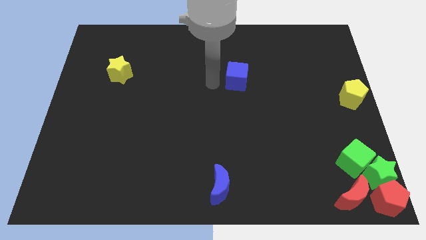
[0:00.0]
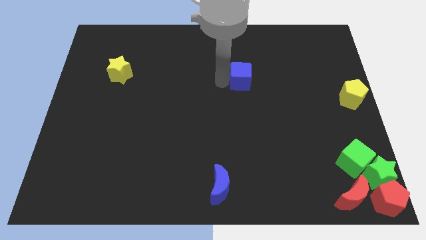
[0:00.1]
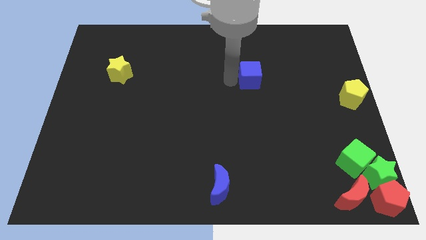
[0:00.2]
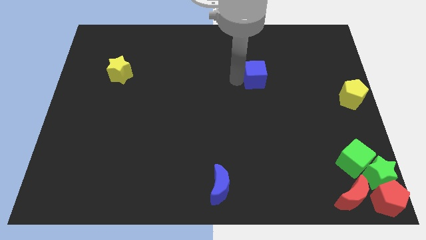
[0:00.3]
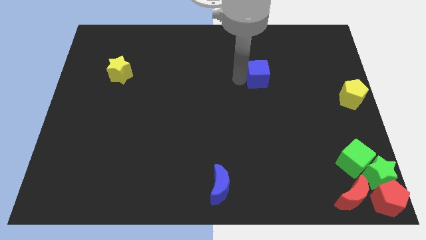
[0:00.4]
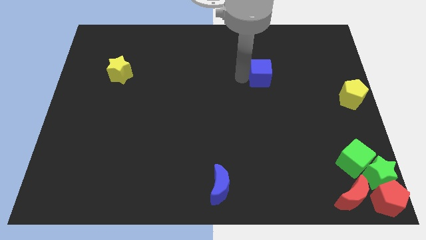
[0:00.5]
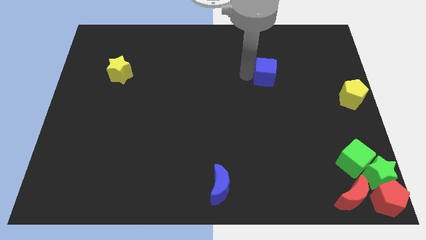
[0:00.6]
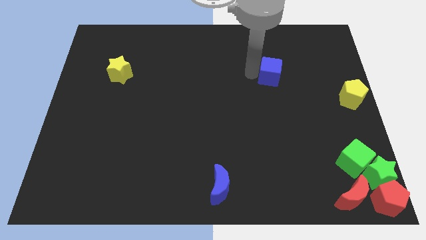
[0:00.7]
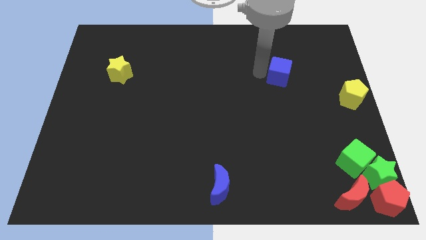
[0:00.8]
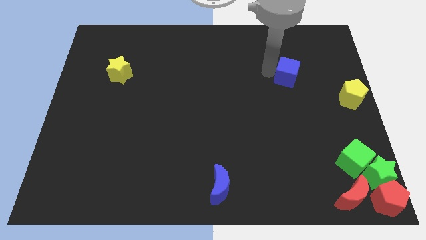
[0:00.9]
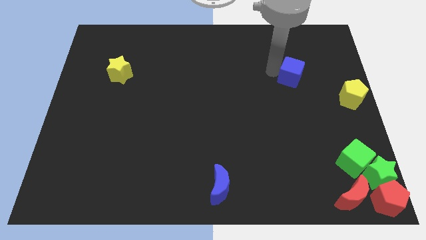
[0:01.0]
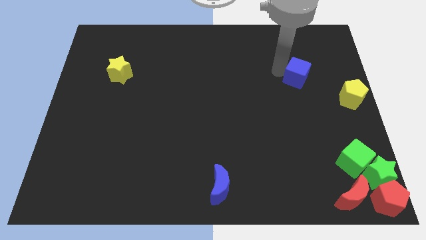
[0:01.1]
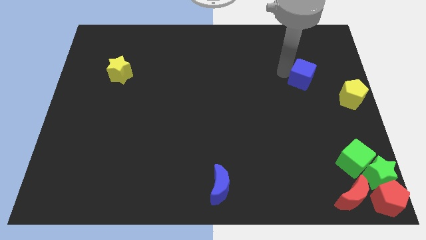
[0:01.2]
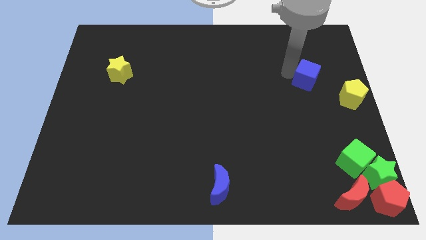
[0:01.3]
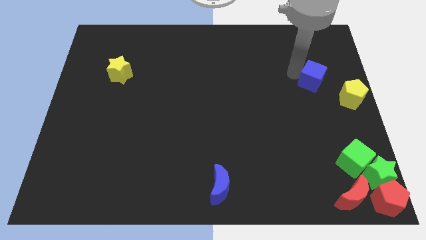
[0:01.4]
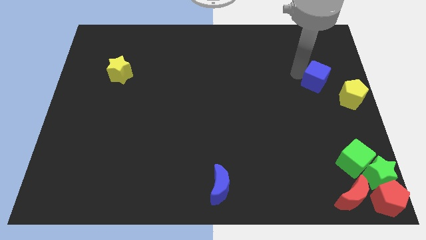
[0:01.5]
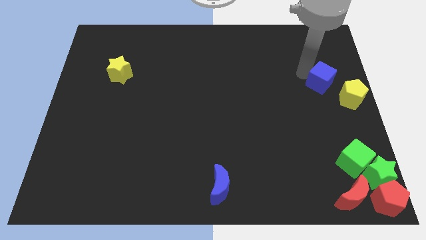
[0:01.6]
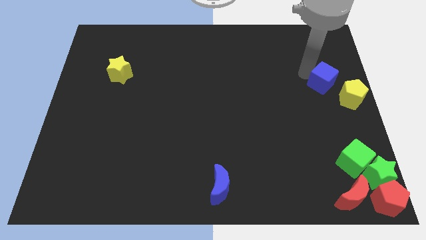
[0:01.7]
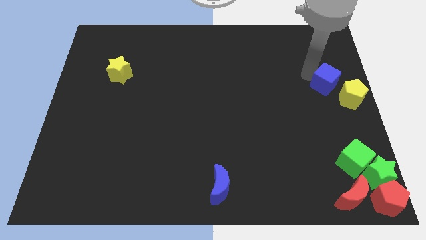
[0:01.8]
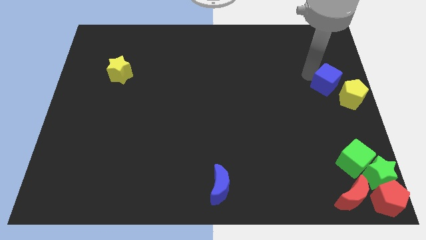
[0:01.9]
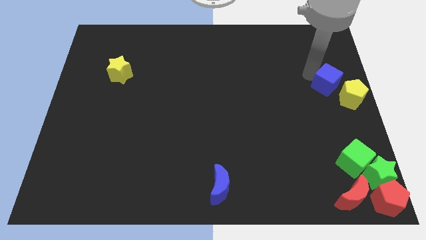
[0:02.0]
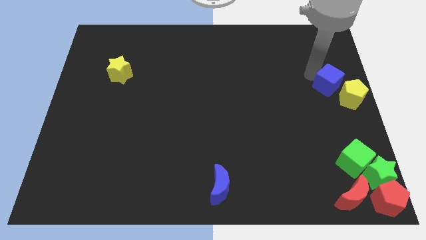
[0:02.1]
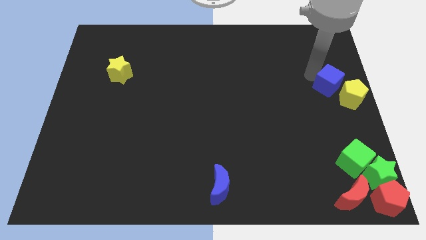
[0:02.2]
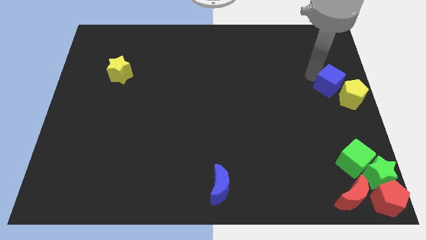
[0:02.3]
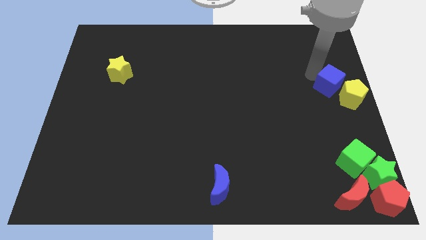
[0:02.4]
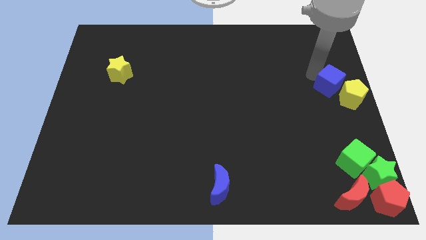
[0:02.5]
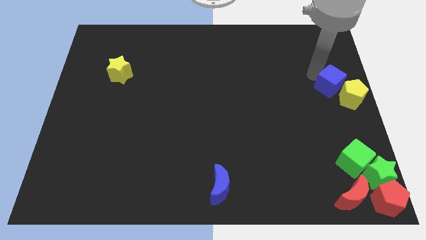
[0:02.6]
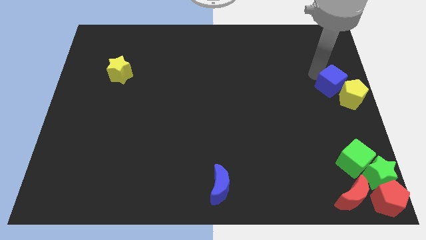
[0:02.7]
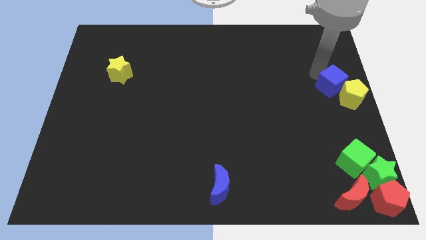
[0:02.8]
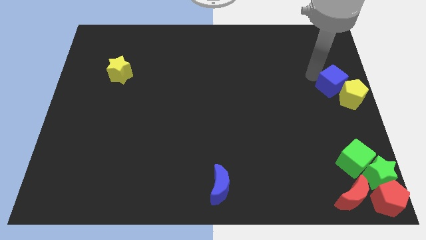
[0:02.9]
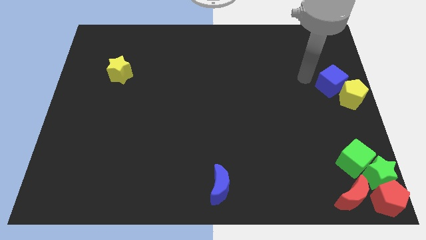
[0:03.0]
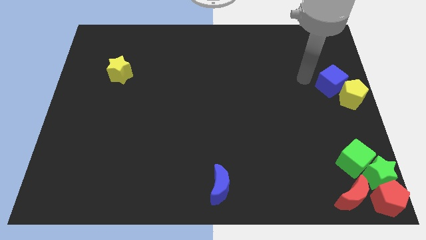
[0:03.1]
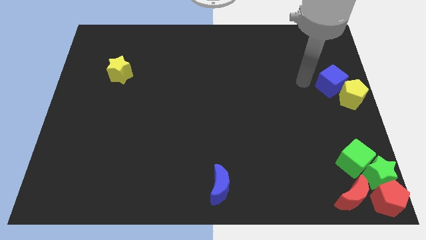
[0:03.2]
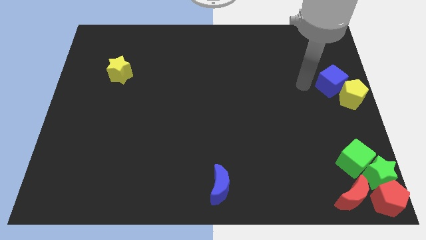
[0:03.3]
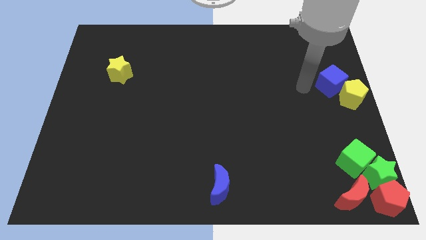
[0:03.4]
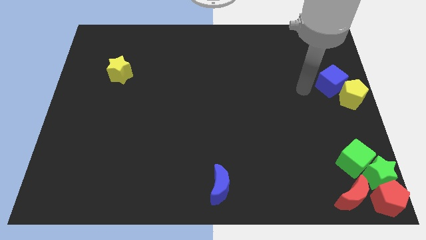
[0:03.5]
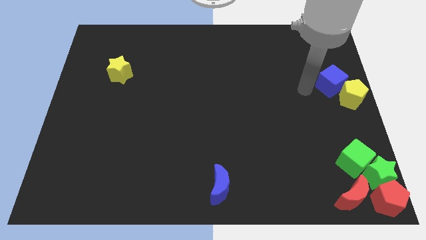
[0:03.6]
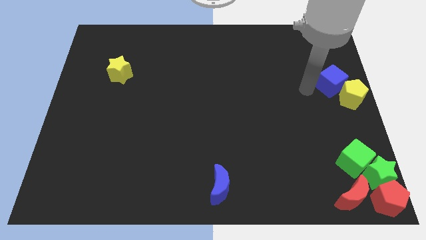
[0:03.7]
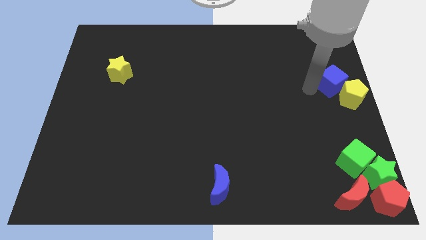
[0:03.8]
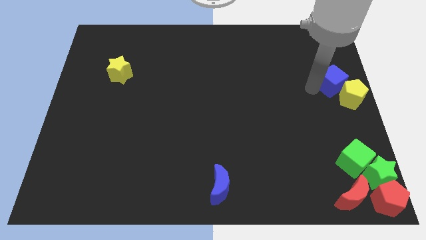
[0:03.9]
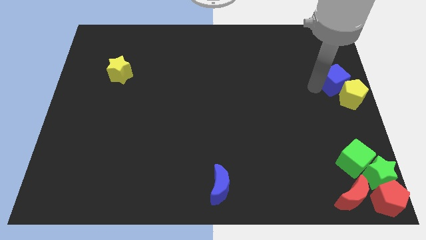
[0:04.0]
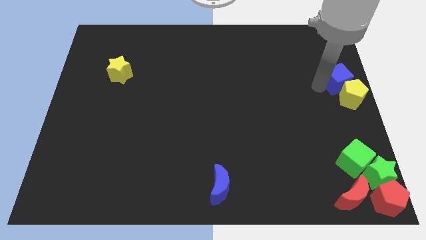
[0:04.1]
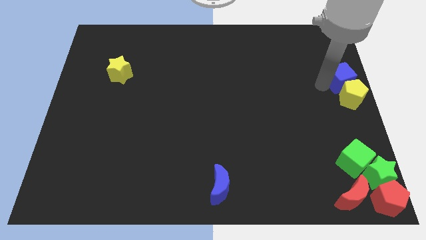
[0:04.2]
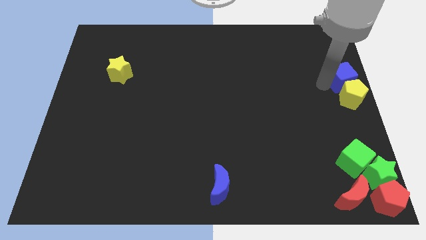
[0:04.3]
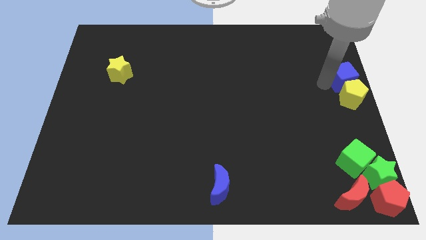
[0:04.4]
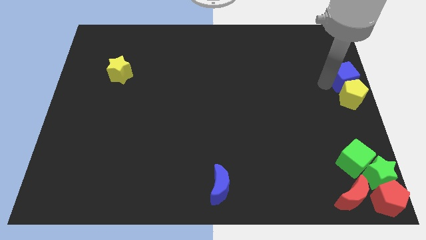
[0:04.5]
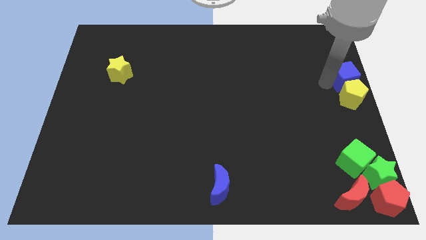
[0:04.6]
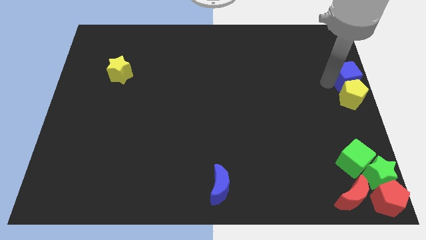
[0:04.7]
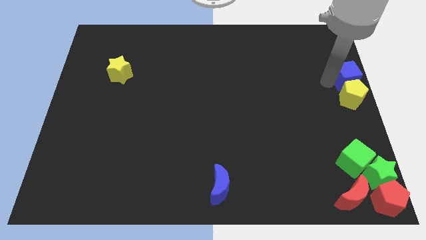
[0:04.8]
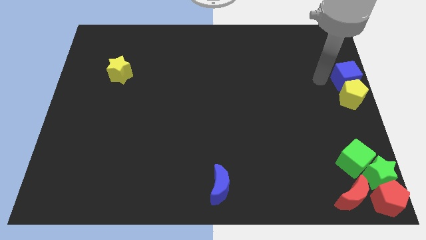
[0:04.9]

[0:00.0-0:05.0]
move the blue cube to the top of the yellow pentagon

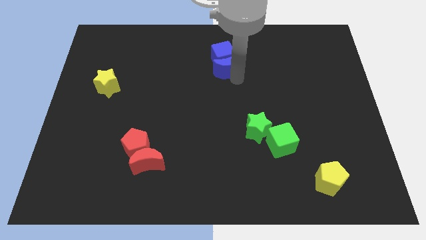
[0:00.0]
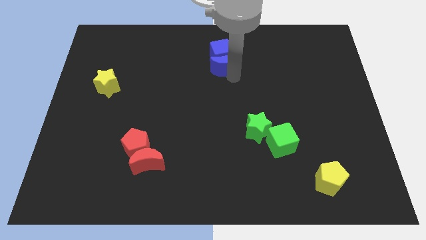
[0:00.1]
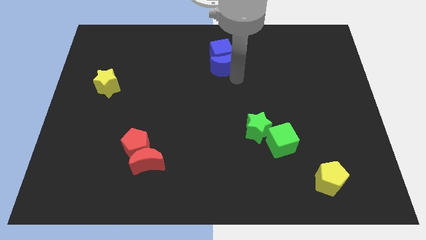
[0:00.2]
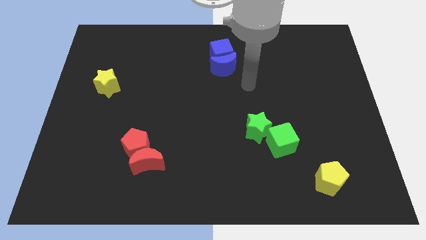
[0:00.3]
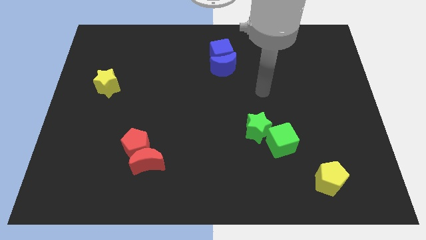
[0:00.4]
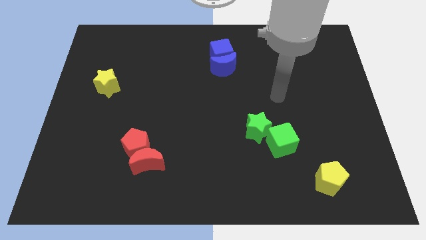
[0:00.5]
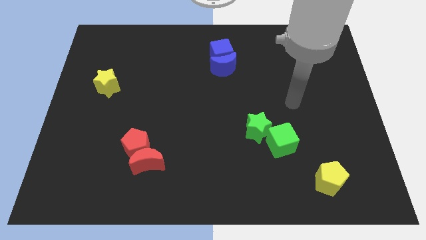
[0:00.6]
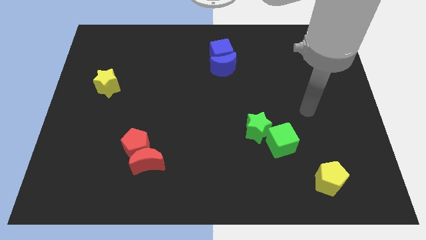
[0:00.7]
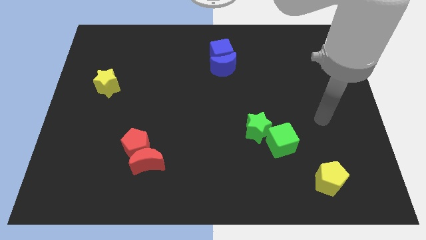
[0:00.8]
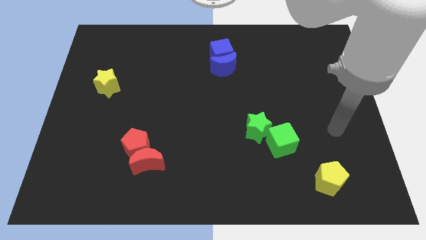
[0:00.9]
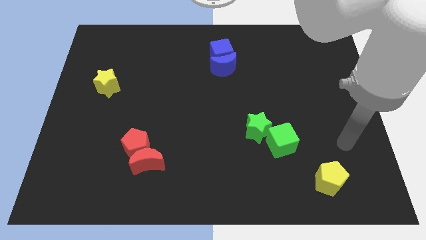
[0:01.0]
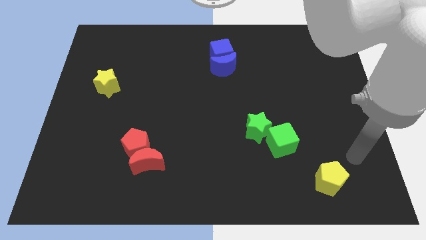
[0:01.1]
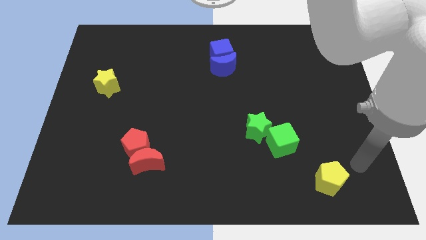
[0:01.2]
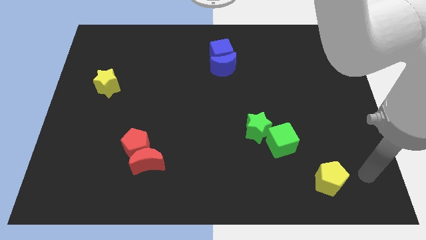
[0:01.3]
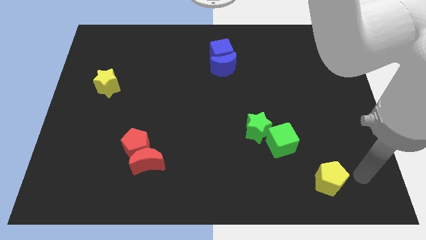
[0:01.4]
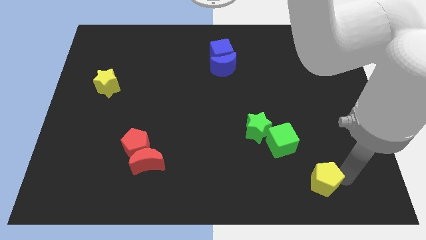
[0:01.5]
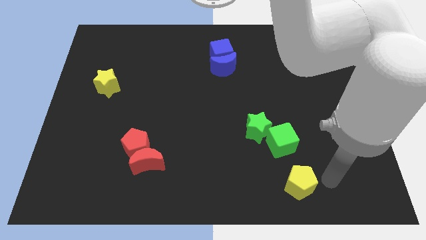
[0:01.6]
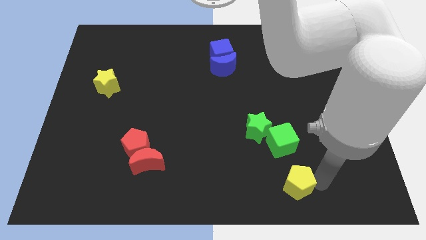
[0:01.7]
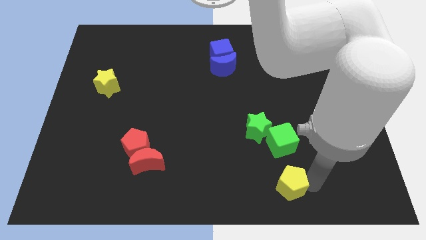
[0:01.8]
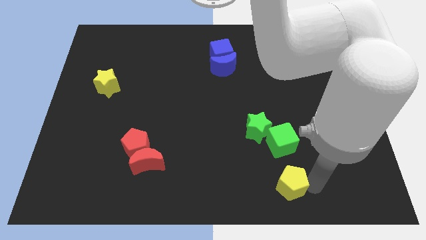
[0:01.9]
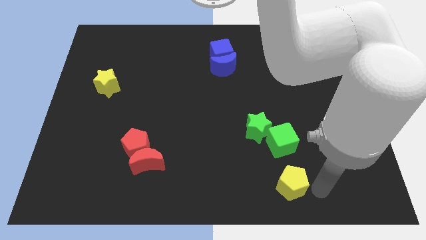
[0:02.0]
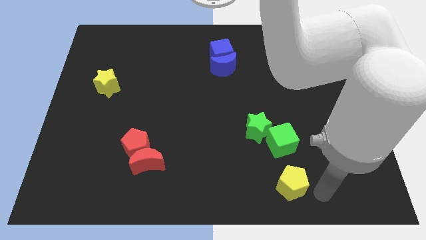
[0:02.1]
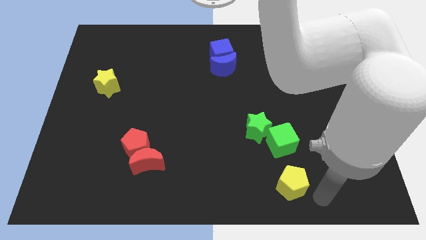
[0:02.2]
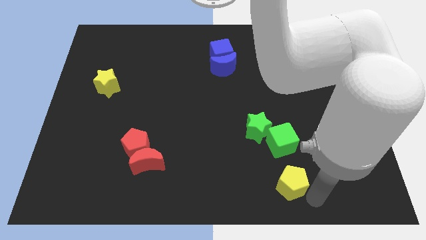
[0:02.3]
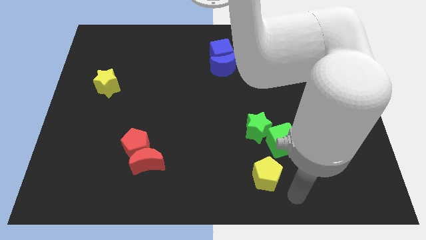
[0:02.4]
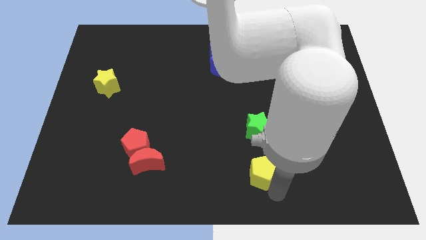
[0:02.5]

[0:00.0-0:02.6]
place the yellow pentagon to the bottom center

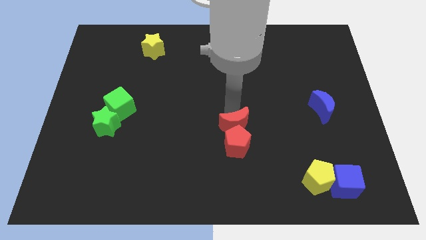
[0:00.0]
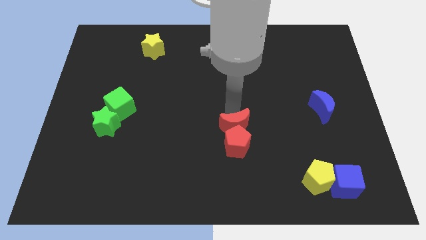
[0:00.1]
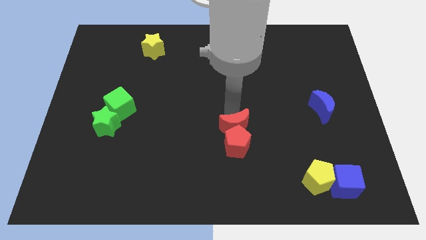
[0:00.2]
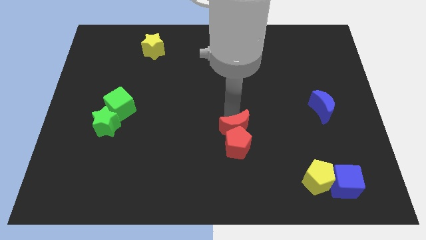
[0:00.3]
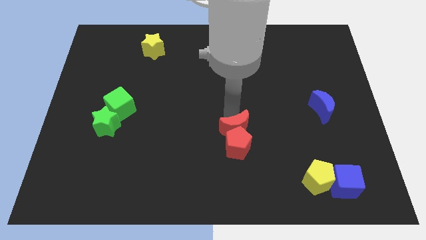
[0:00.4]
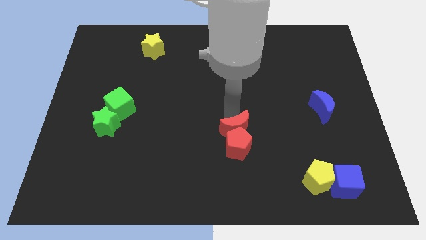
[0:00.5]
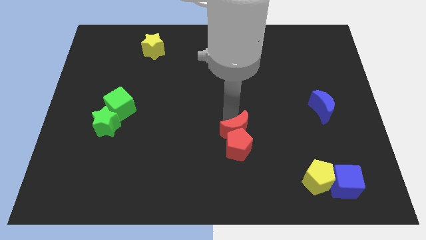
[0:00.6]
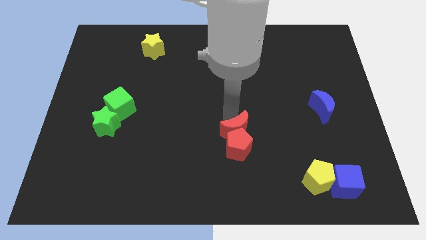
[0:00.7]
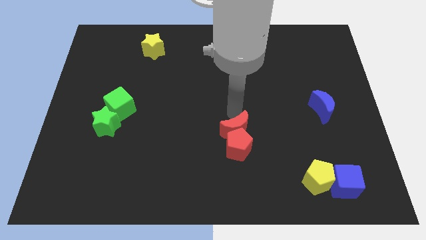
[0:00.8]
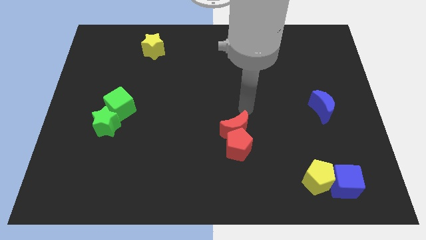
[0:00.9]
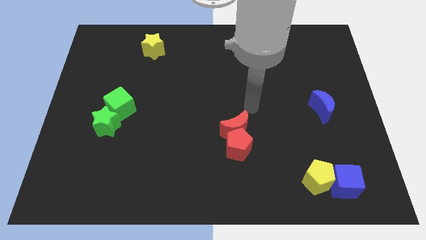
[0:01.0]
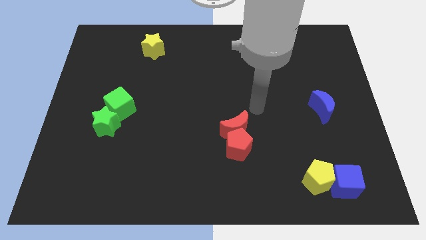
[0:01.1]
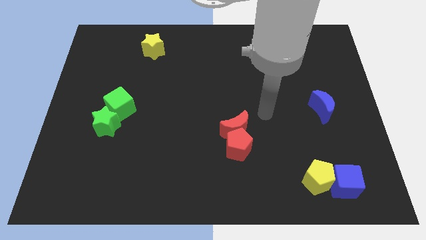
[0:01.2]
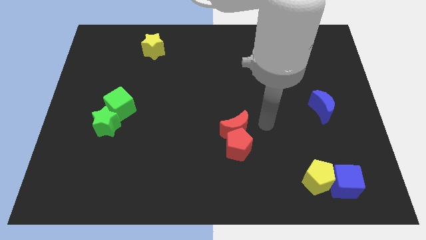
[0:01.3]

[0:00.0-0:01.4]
point your arm to the right of the red moon
